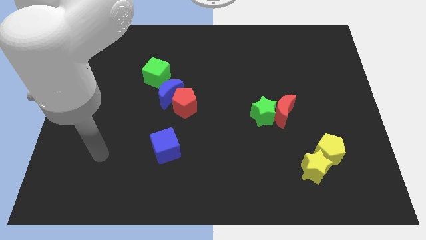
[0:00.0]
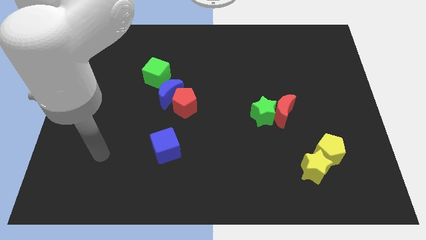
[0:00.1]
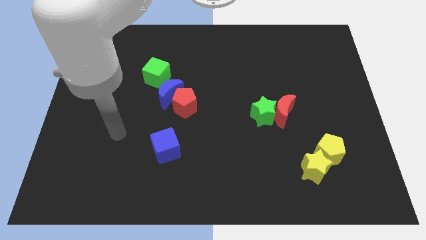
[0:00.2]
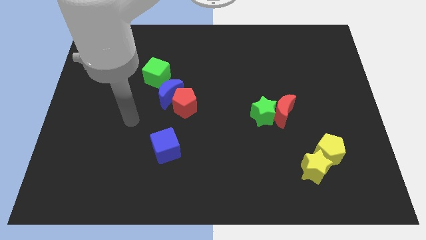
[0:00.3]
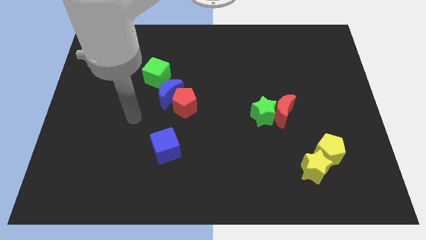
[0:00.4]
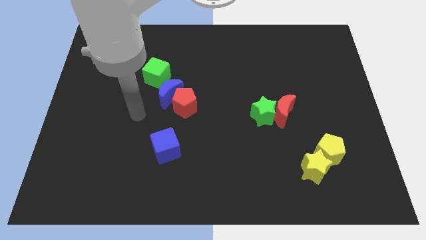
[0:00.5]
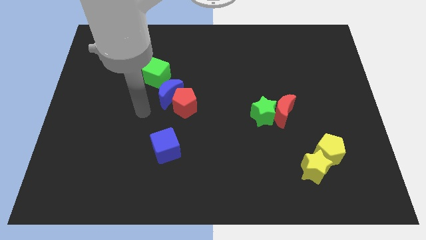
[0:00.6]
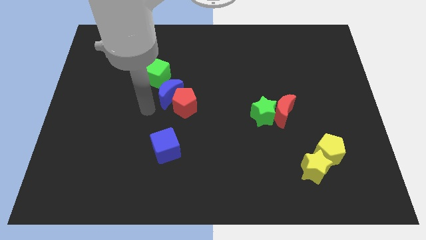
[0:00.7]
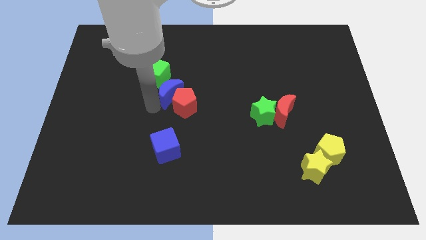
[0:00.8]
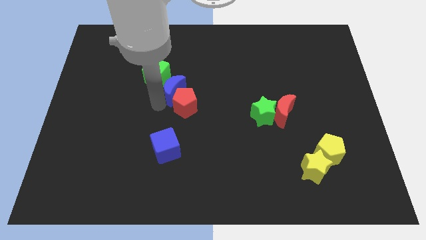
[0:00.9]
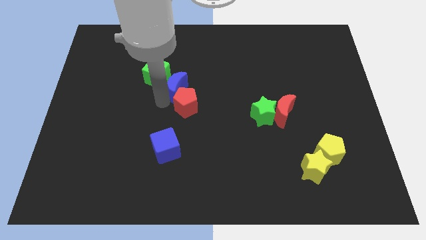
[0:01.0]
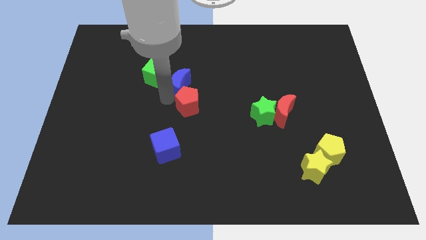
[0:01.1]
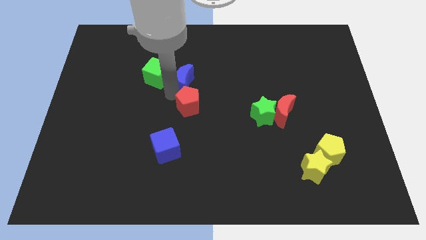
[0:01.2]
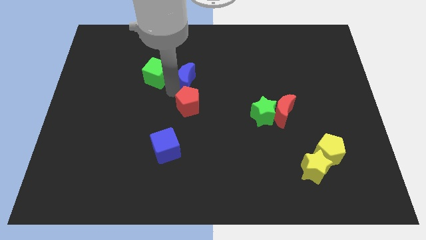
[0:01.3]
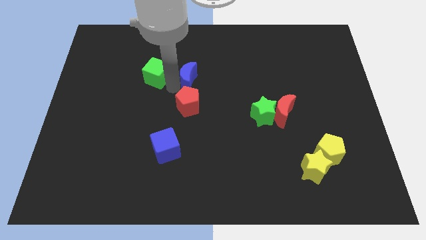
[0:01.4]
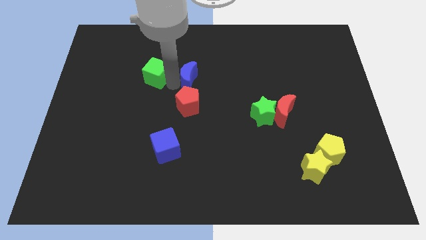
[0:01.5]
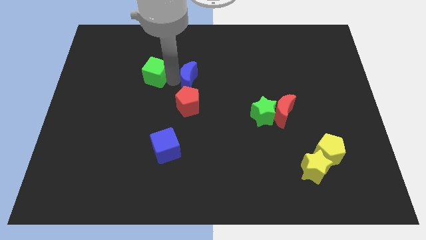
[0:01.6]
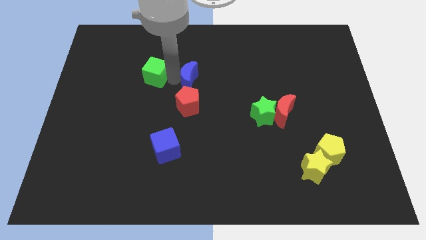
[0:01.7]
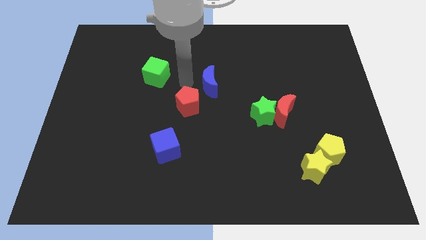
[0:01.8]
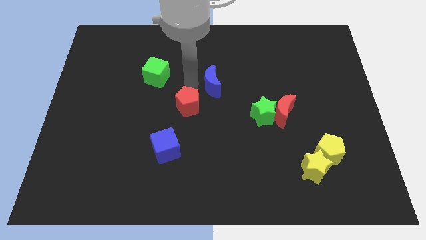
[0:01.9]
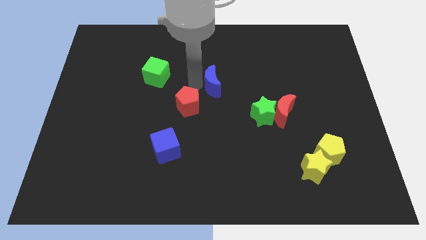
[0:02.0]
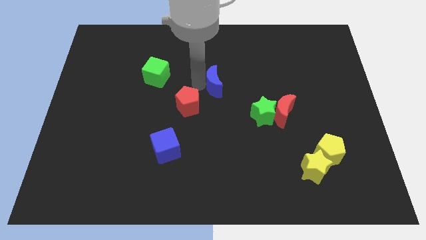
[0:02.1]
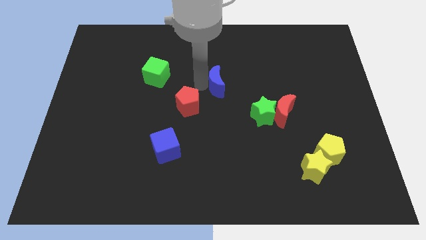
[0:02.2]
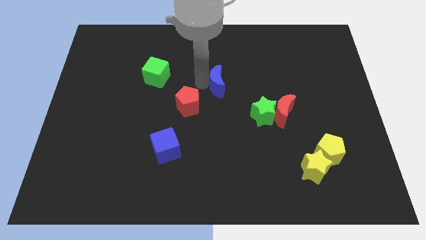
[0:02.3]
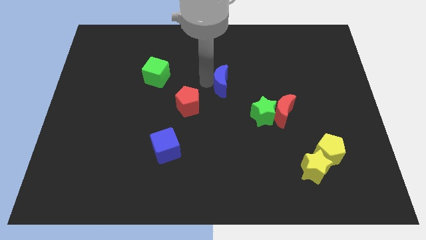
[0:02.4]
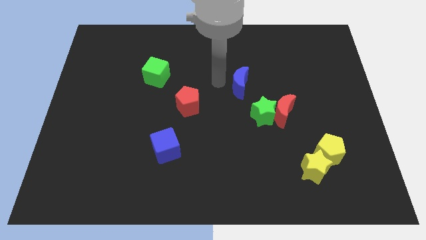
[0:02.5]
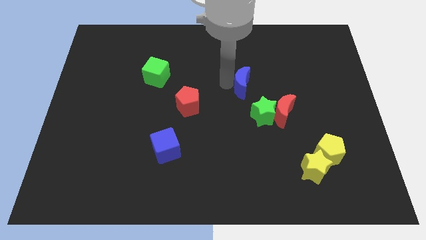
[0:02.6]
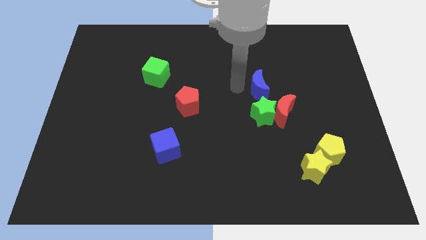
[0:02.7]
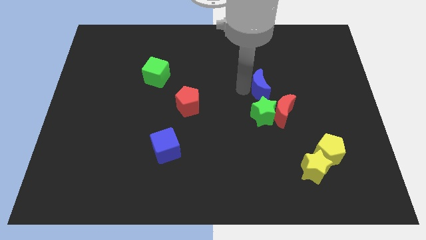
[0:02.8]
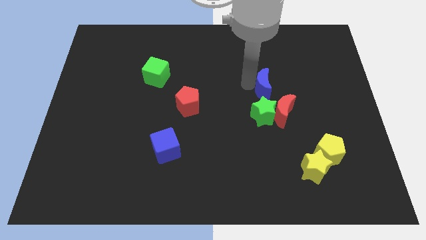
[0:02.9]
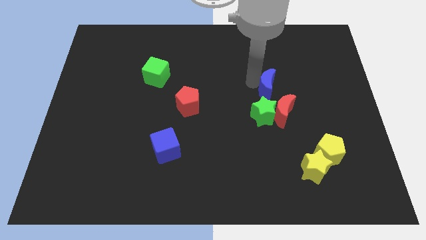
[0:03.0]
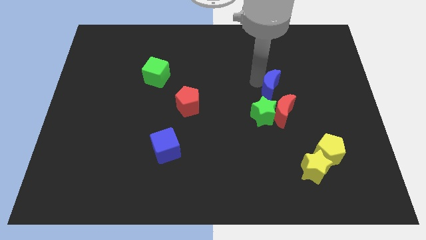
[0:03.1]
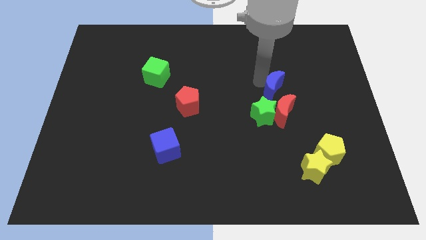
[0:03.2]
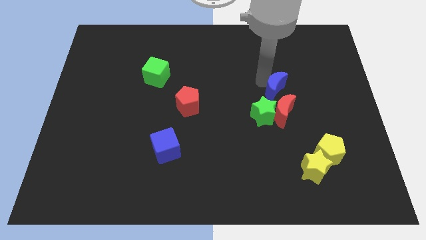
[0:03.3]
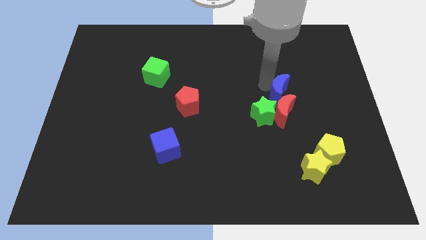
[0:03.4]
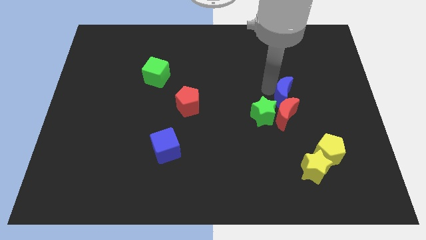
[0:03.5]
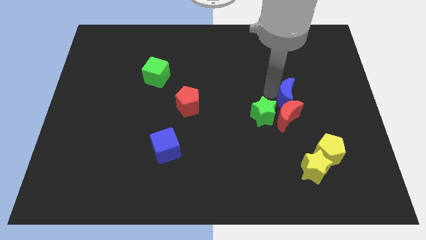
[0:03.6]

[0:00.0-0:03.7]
push the blue moon towards the red moon

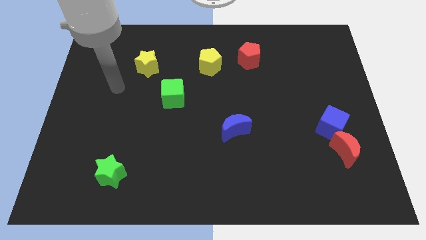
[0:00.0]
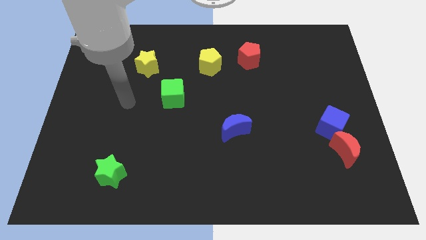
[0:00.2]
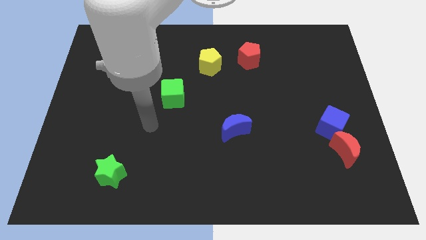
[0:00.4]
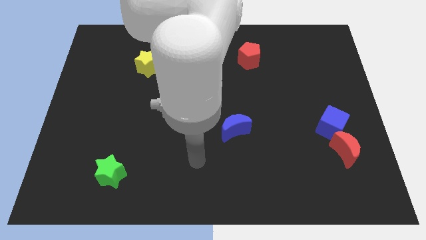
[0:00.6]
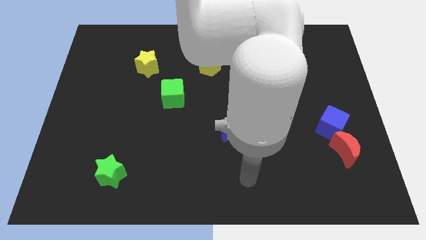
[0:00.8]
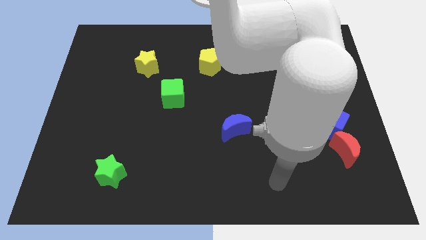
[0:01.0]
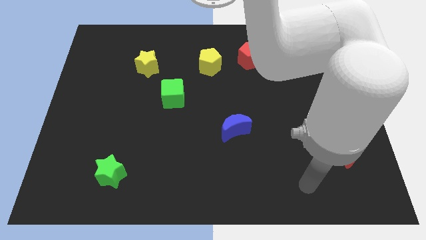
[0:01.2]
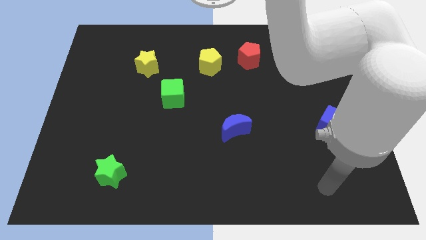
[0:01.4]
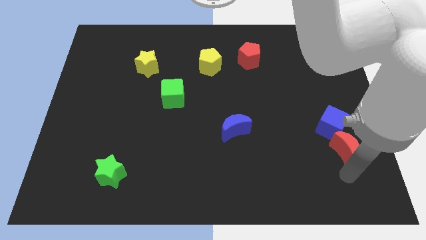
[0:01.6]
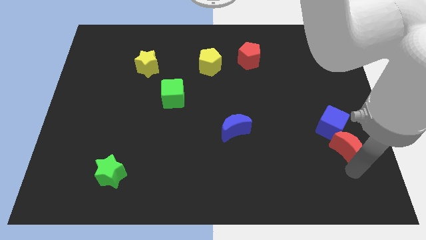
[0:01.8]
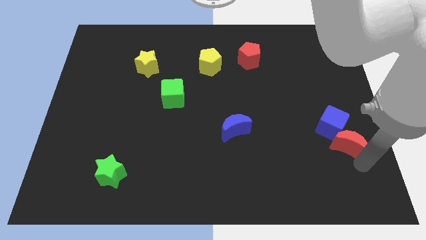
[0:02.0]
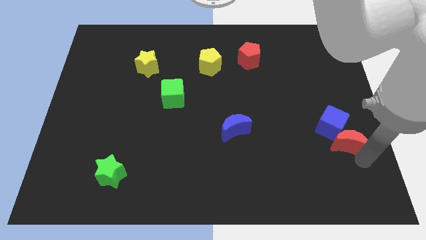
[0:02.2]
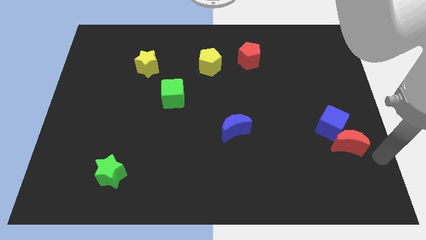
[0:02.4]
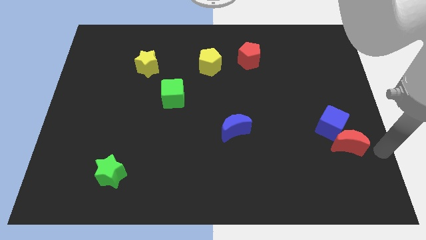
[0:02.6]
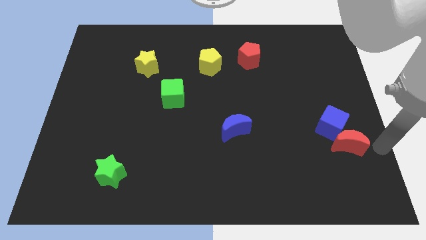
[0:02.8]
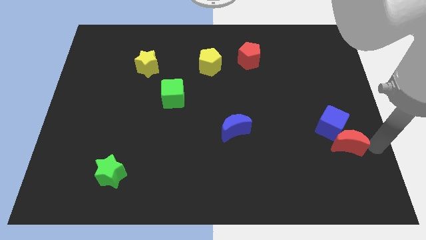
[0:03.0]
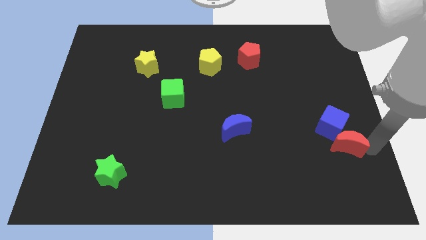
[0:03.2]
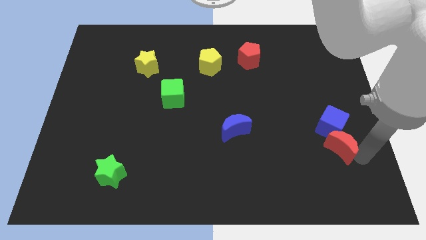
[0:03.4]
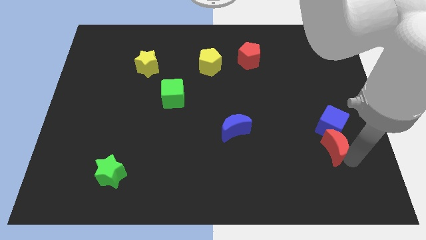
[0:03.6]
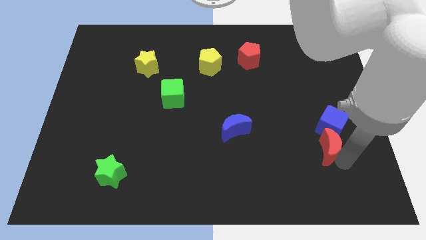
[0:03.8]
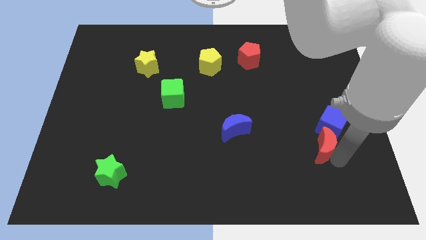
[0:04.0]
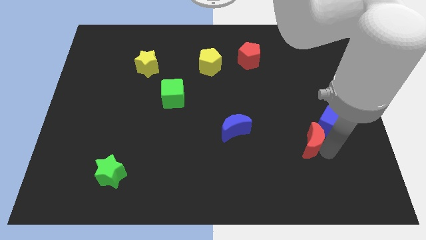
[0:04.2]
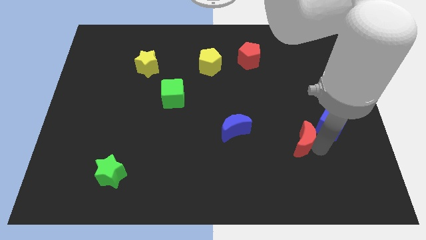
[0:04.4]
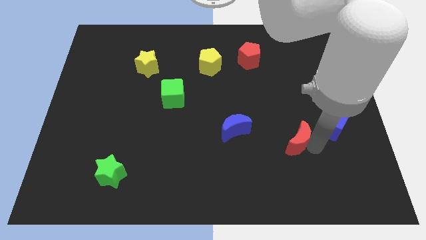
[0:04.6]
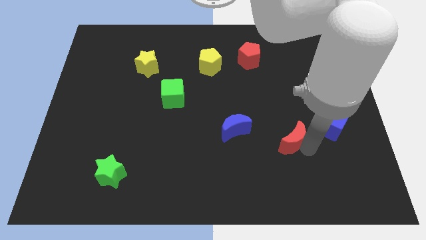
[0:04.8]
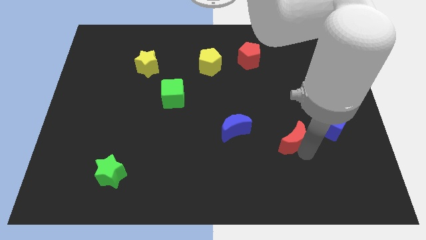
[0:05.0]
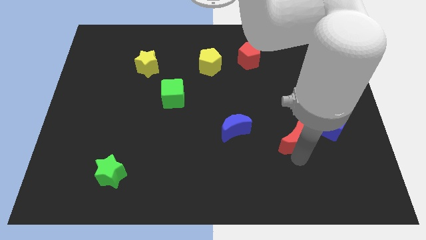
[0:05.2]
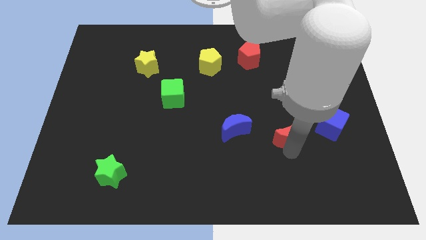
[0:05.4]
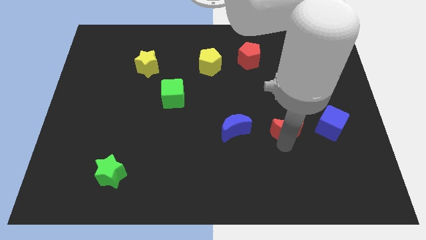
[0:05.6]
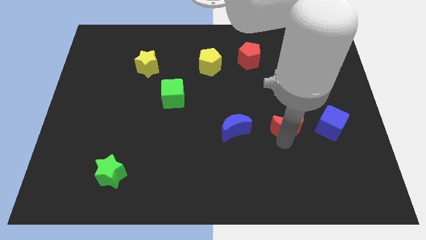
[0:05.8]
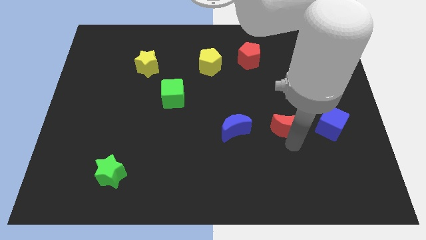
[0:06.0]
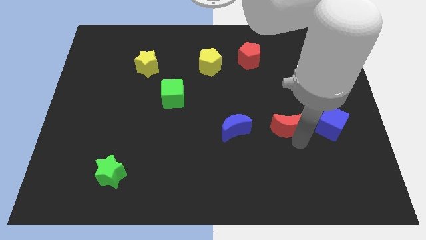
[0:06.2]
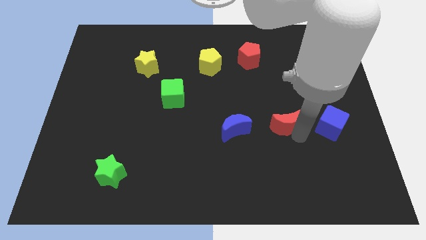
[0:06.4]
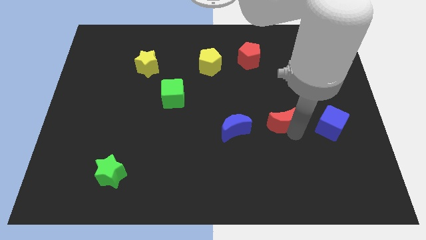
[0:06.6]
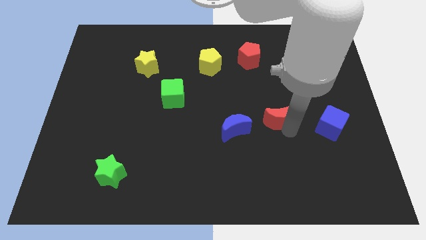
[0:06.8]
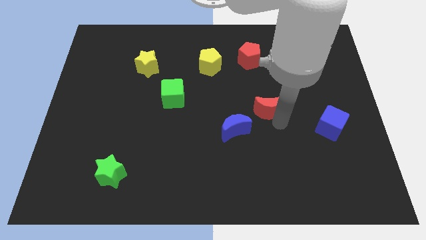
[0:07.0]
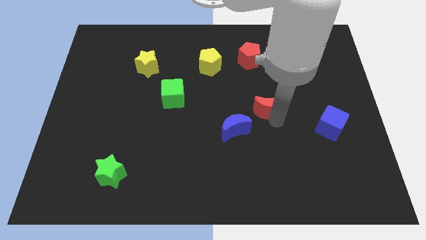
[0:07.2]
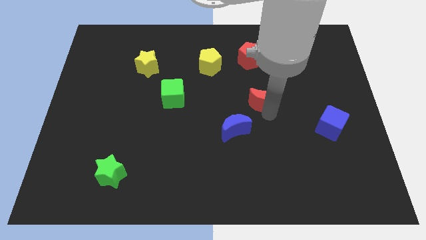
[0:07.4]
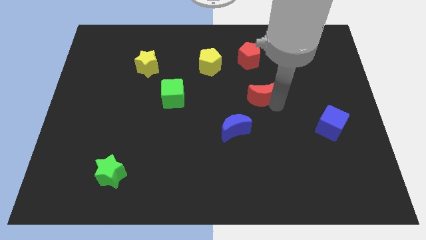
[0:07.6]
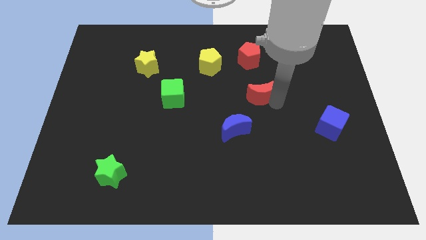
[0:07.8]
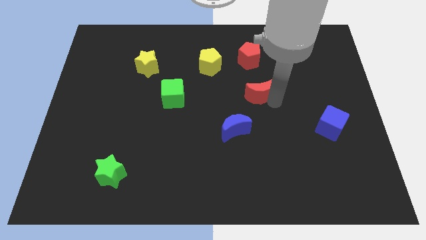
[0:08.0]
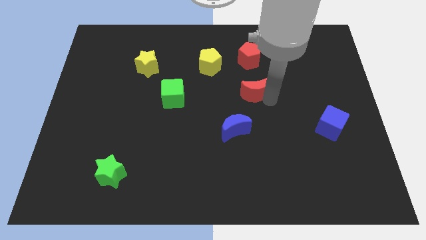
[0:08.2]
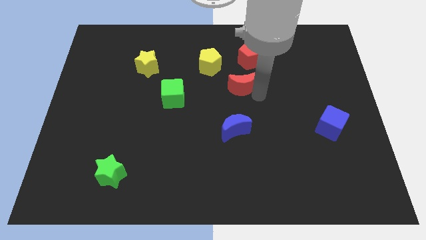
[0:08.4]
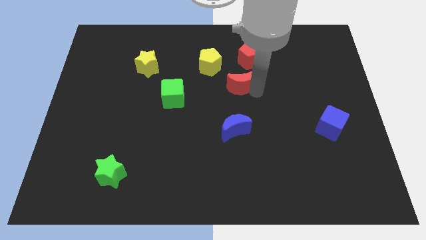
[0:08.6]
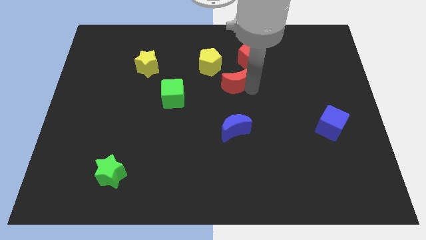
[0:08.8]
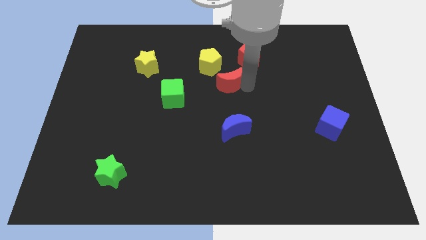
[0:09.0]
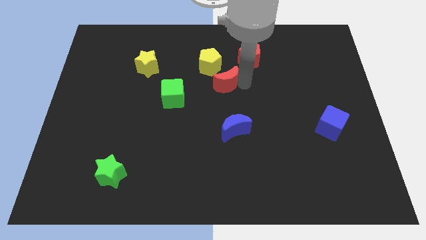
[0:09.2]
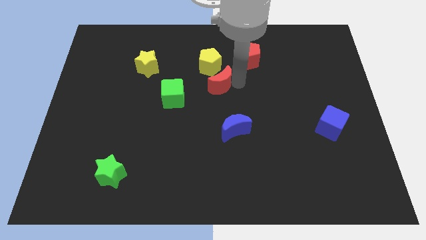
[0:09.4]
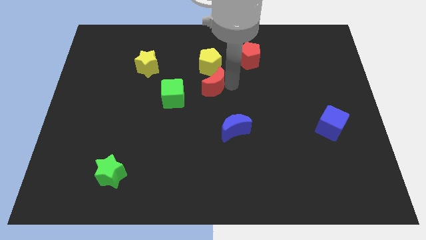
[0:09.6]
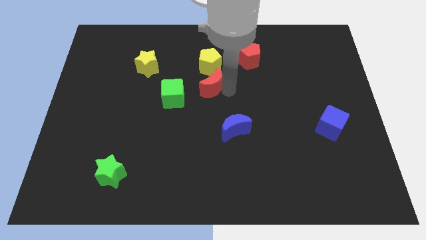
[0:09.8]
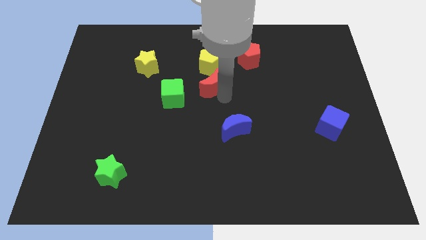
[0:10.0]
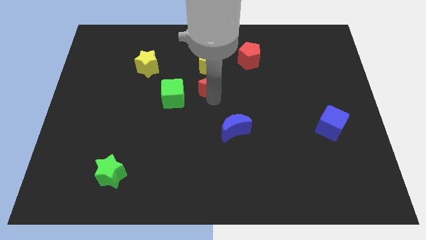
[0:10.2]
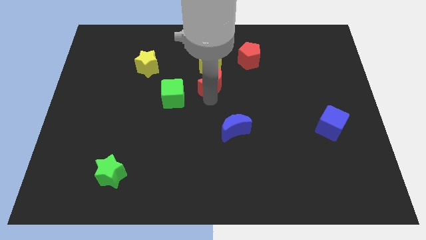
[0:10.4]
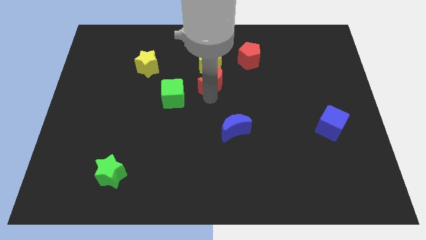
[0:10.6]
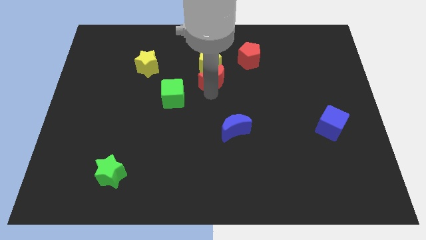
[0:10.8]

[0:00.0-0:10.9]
slide the red moon close to the yellow pentagon
